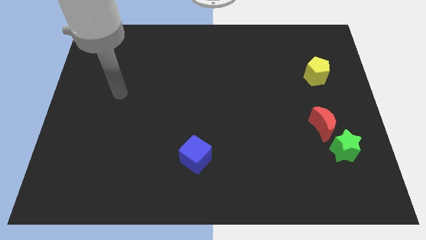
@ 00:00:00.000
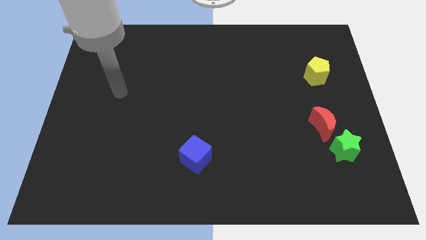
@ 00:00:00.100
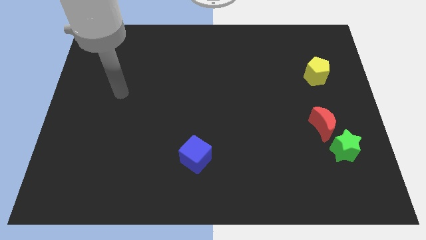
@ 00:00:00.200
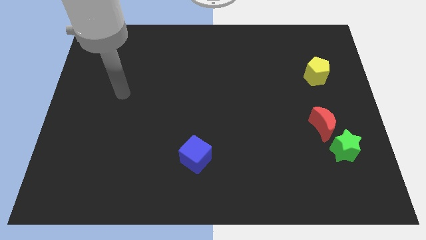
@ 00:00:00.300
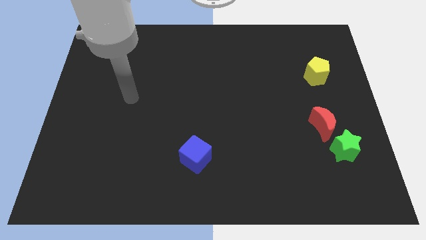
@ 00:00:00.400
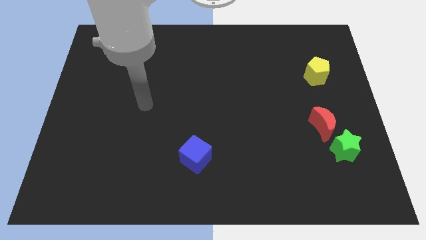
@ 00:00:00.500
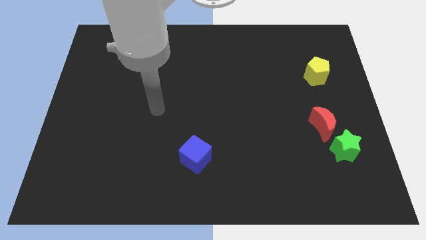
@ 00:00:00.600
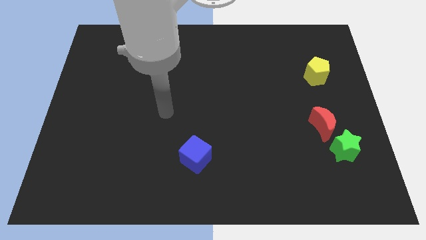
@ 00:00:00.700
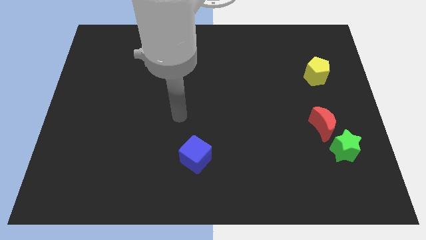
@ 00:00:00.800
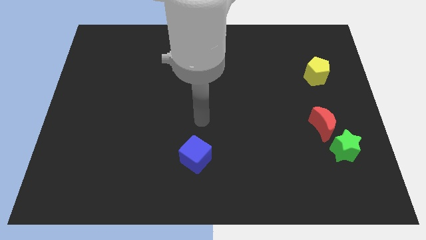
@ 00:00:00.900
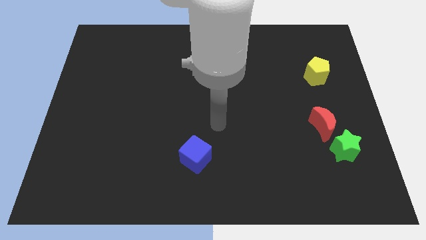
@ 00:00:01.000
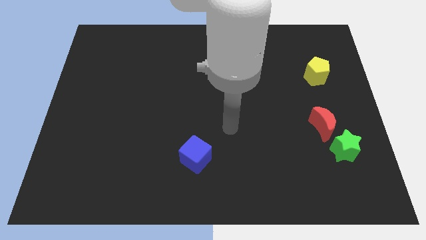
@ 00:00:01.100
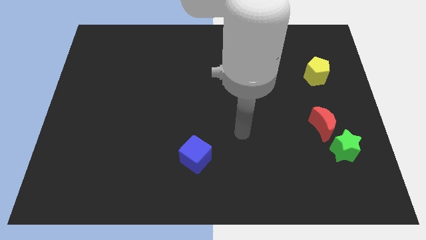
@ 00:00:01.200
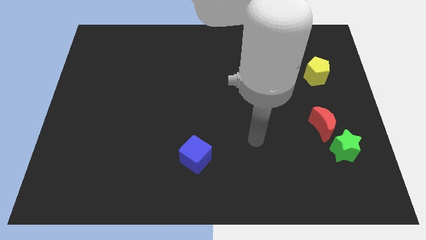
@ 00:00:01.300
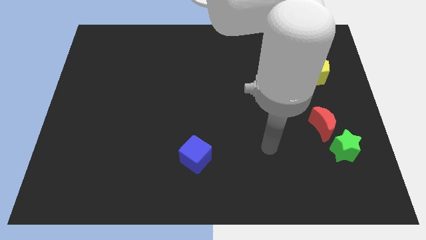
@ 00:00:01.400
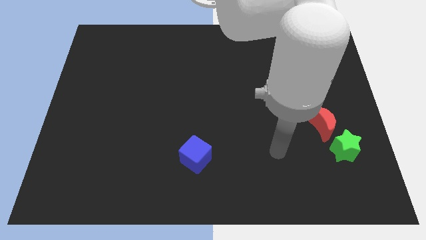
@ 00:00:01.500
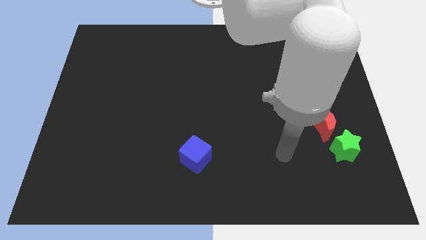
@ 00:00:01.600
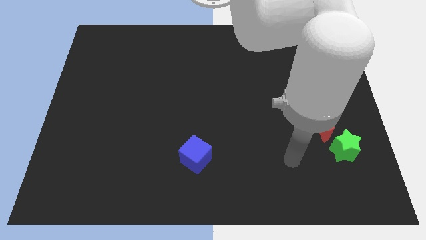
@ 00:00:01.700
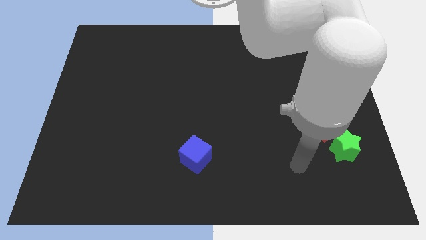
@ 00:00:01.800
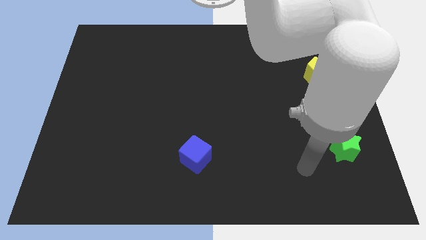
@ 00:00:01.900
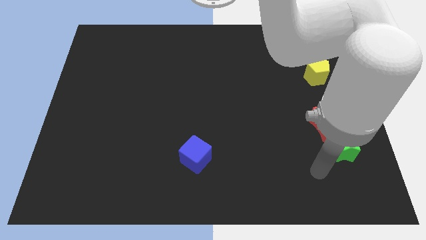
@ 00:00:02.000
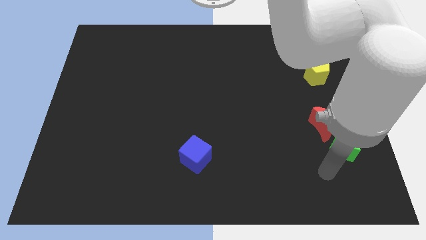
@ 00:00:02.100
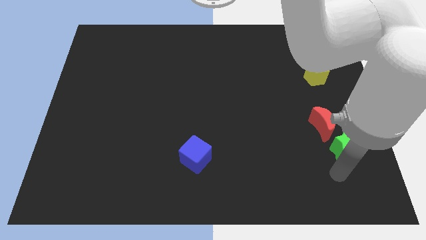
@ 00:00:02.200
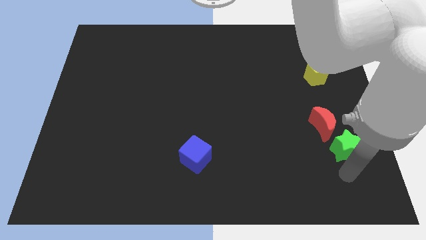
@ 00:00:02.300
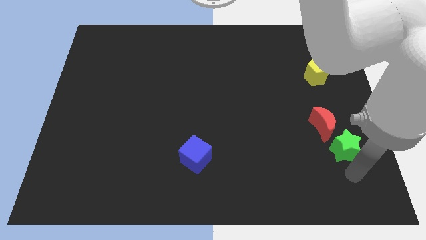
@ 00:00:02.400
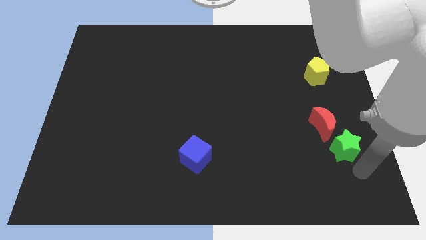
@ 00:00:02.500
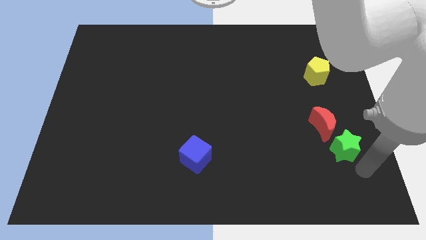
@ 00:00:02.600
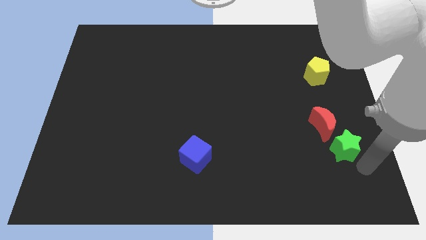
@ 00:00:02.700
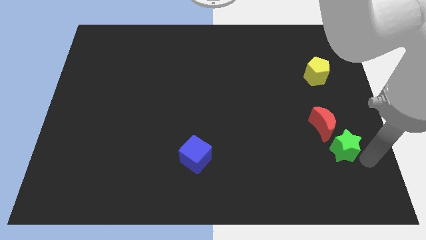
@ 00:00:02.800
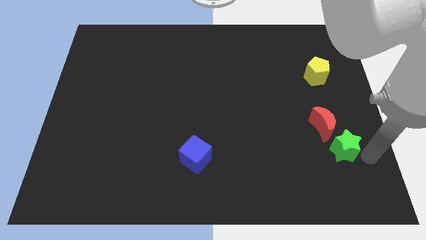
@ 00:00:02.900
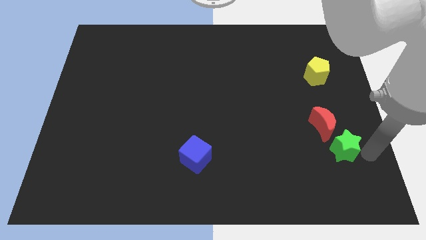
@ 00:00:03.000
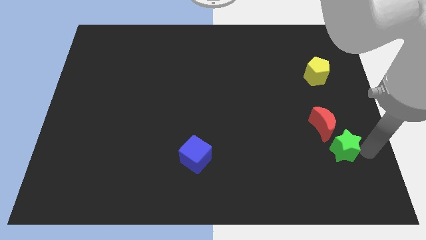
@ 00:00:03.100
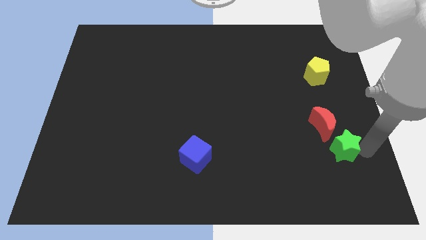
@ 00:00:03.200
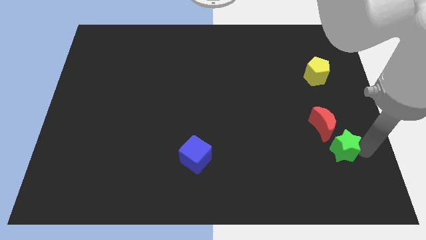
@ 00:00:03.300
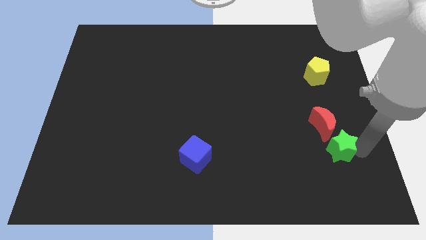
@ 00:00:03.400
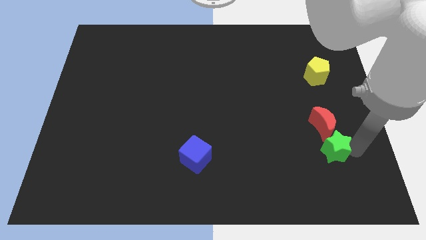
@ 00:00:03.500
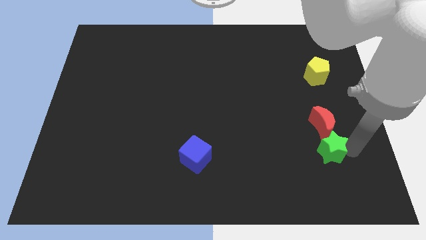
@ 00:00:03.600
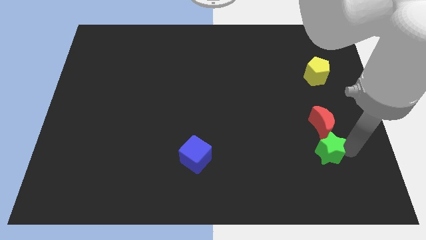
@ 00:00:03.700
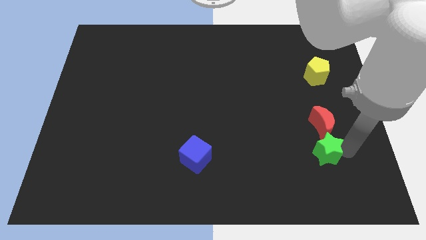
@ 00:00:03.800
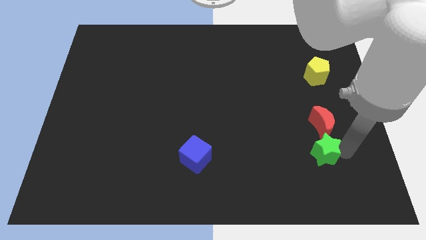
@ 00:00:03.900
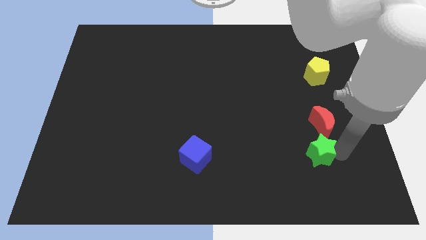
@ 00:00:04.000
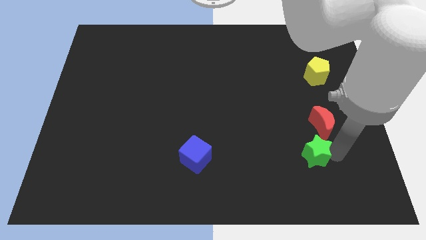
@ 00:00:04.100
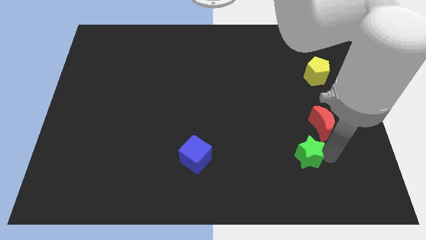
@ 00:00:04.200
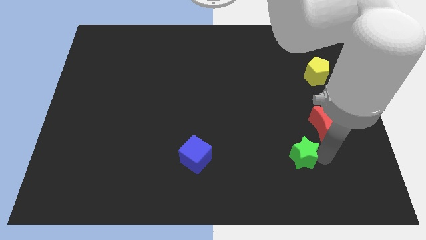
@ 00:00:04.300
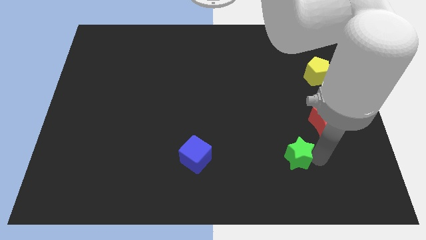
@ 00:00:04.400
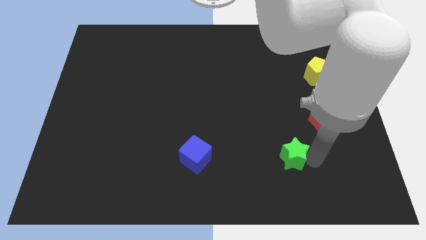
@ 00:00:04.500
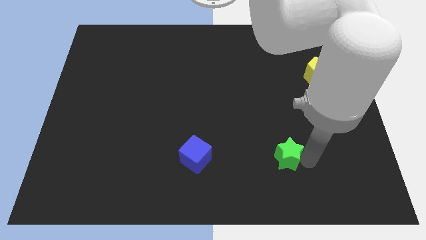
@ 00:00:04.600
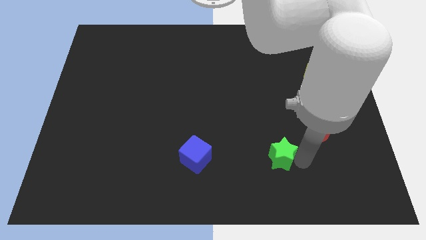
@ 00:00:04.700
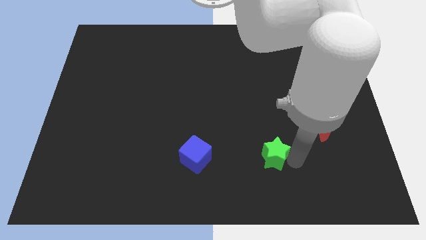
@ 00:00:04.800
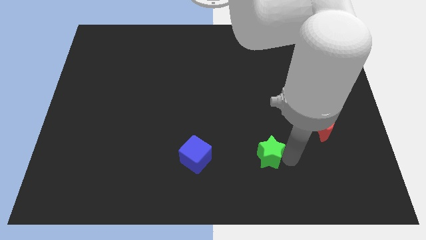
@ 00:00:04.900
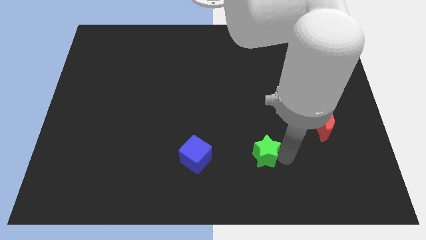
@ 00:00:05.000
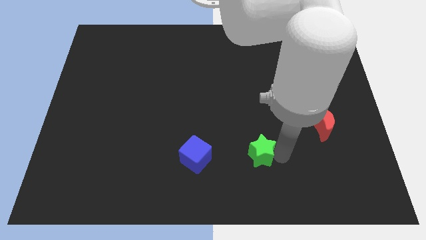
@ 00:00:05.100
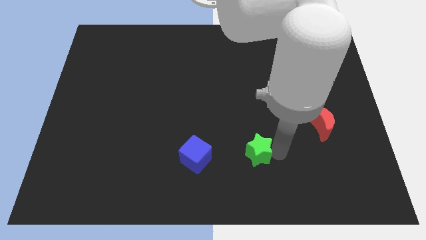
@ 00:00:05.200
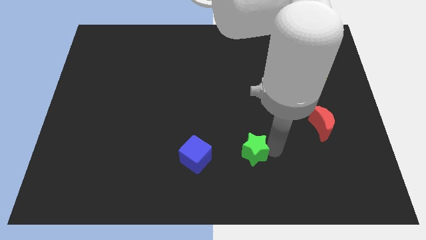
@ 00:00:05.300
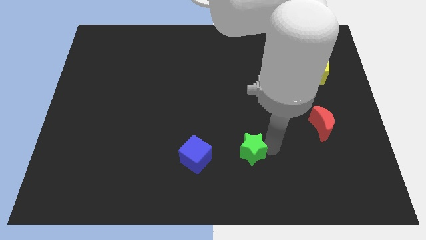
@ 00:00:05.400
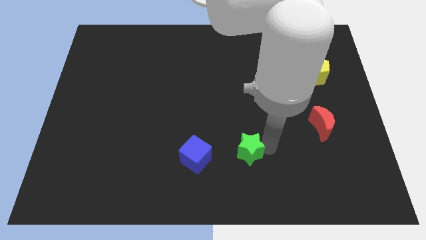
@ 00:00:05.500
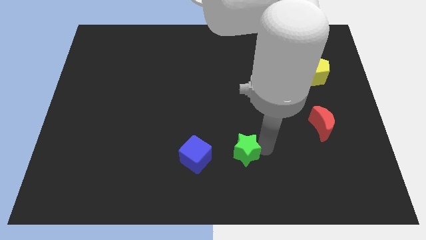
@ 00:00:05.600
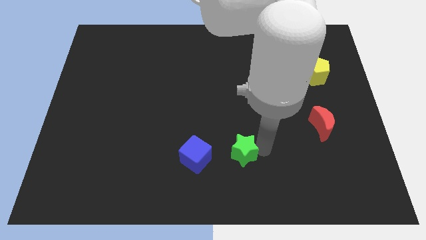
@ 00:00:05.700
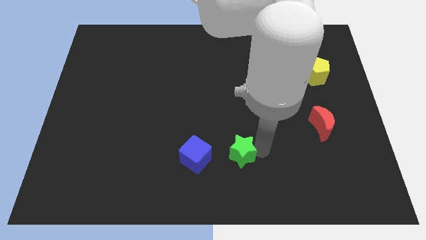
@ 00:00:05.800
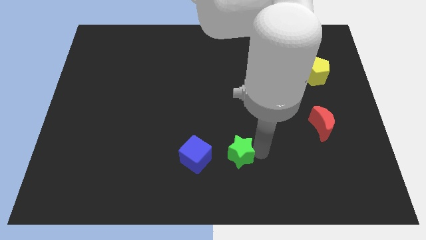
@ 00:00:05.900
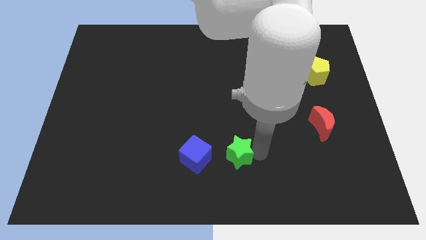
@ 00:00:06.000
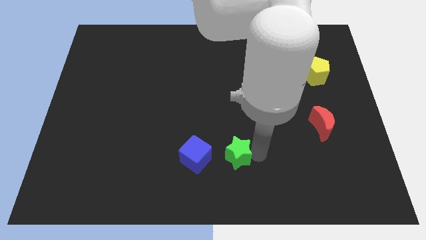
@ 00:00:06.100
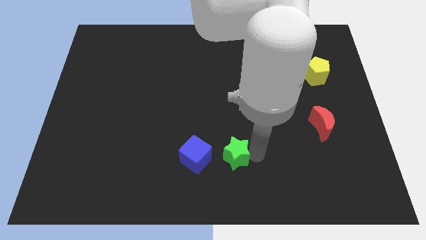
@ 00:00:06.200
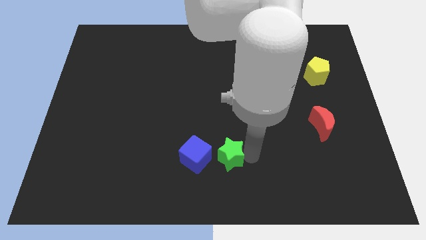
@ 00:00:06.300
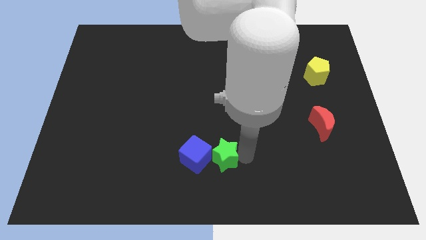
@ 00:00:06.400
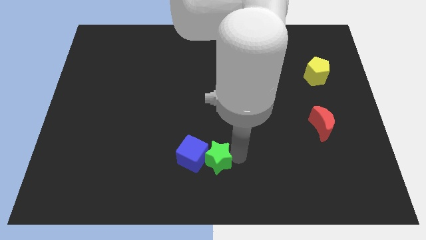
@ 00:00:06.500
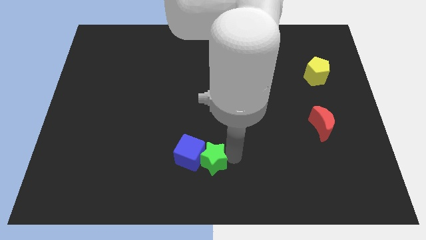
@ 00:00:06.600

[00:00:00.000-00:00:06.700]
put the green star towards the blue cube

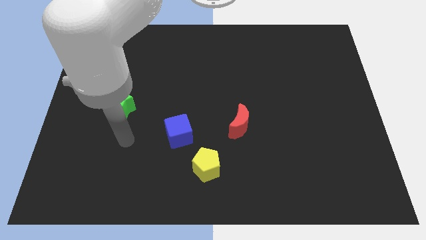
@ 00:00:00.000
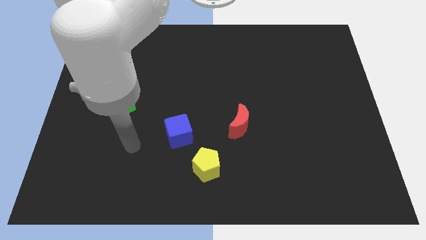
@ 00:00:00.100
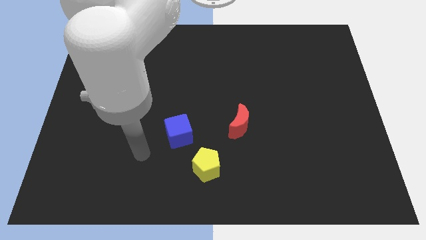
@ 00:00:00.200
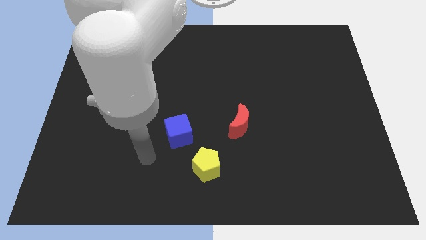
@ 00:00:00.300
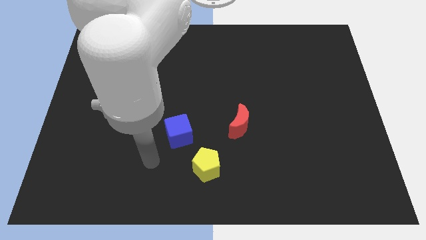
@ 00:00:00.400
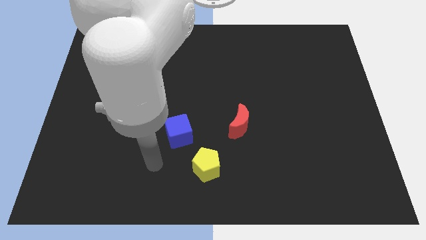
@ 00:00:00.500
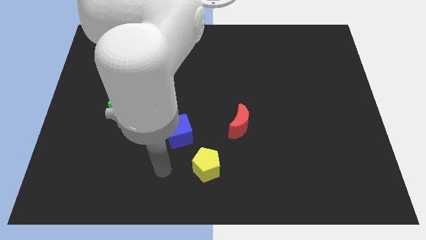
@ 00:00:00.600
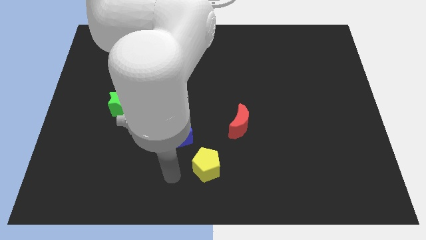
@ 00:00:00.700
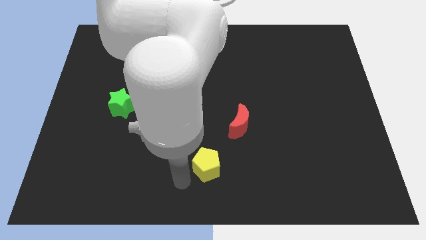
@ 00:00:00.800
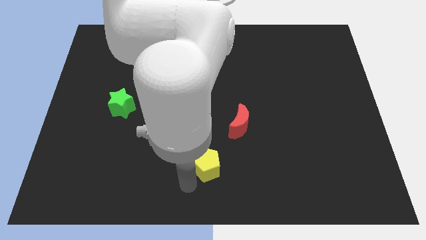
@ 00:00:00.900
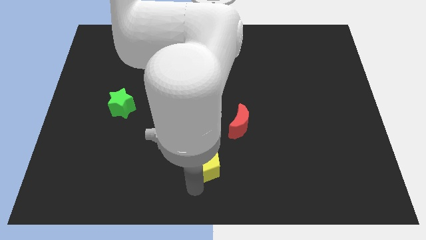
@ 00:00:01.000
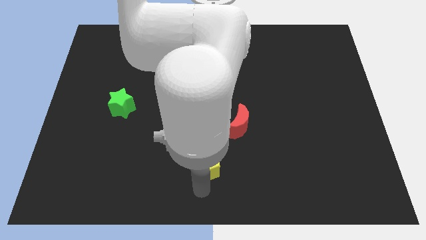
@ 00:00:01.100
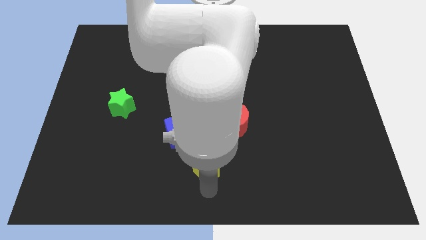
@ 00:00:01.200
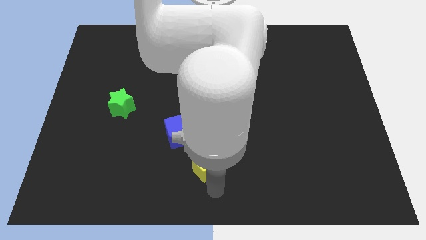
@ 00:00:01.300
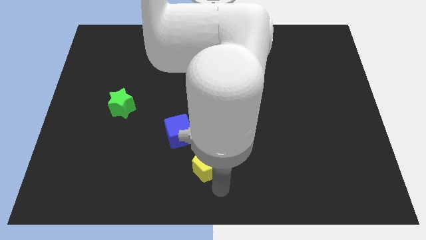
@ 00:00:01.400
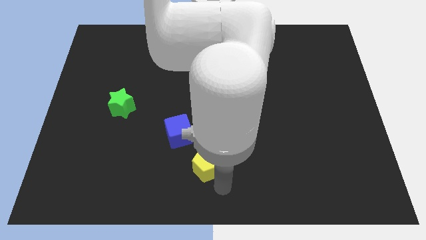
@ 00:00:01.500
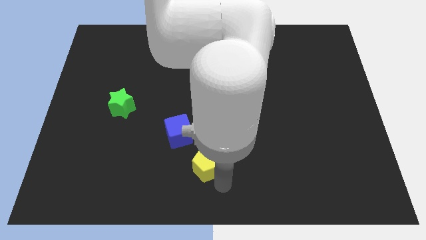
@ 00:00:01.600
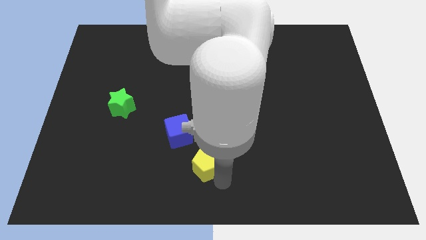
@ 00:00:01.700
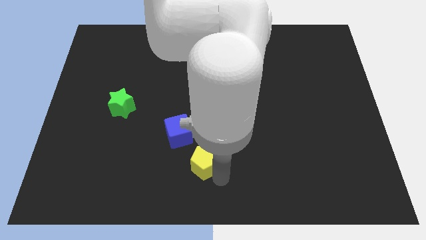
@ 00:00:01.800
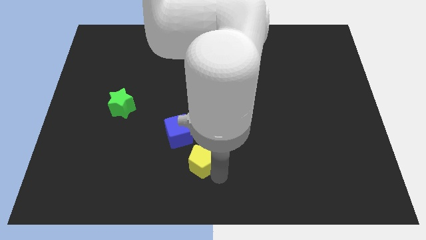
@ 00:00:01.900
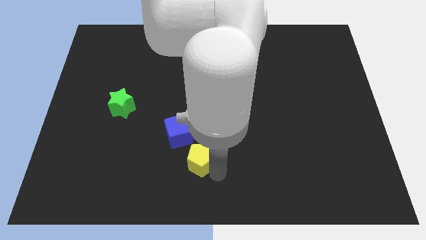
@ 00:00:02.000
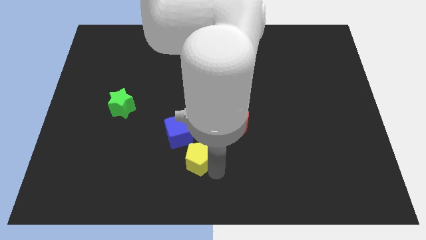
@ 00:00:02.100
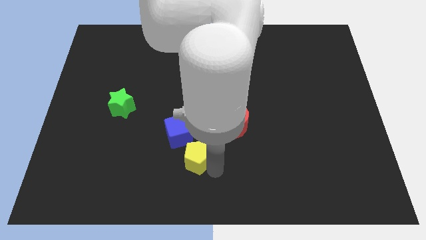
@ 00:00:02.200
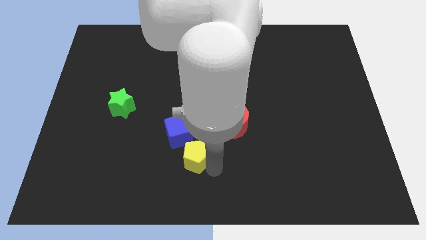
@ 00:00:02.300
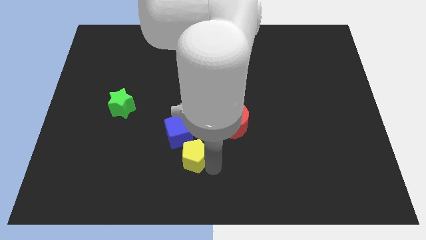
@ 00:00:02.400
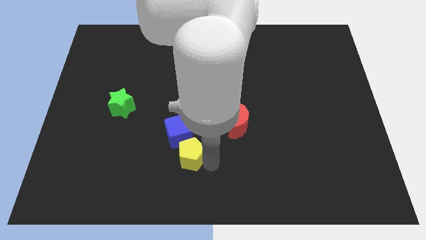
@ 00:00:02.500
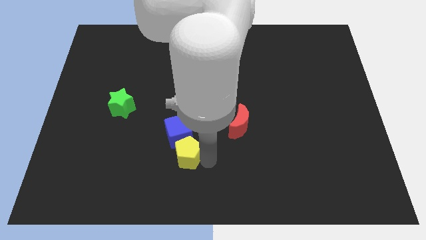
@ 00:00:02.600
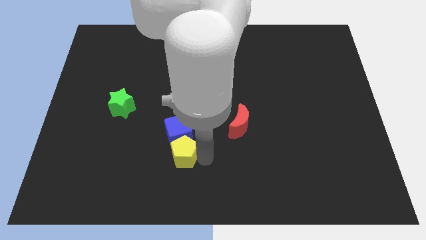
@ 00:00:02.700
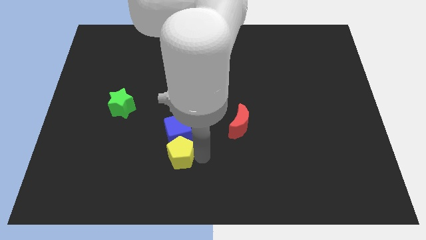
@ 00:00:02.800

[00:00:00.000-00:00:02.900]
push the yellow pentagon close to the blue cube
